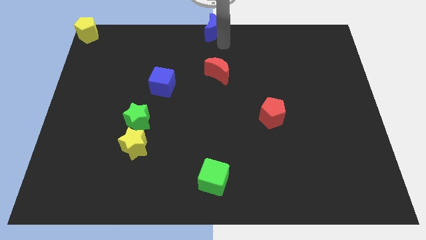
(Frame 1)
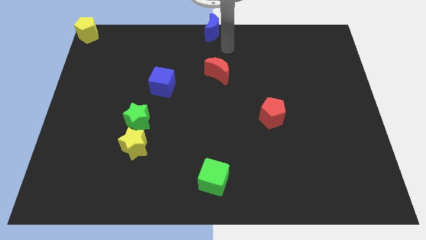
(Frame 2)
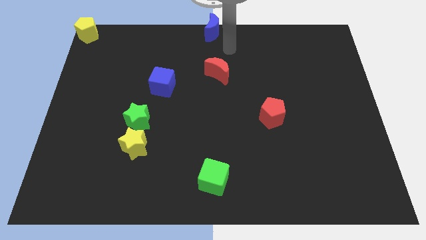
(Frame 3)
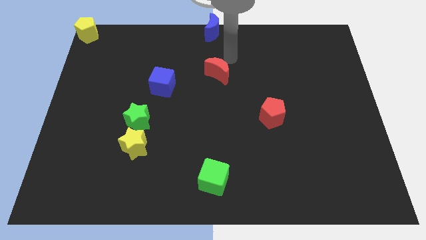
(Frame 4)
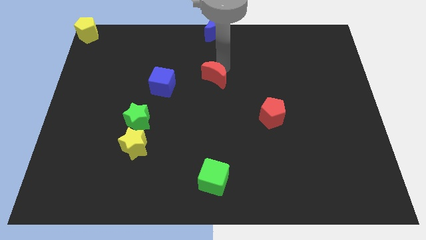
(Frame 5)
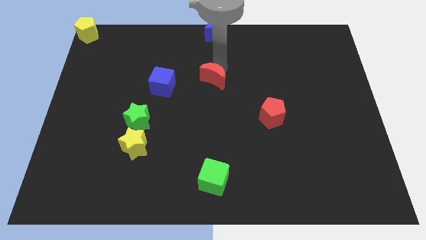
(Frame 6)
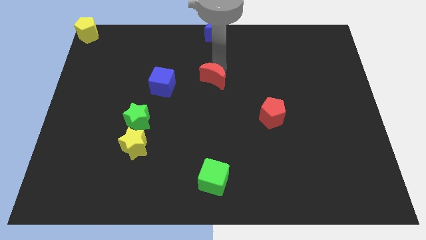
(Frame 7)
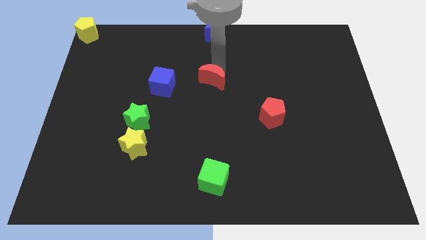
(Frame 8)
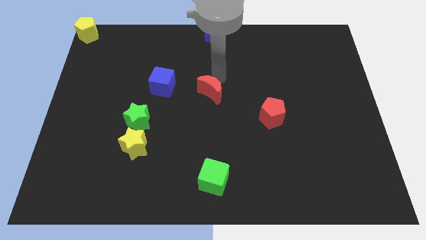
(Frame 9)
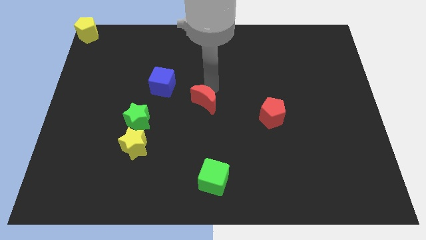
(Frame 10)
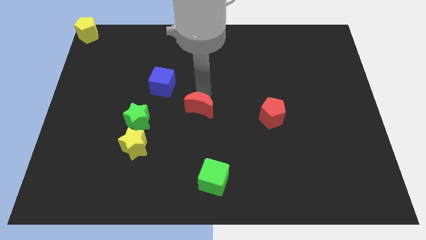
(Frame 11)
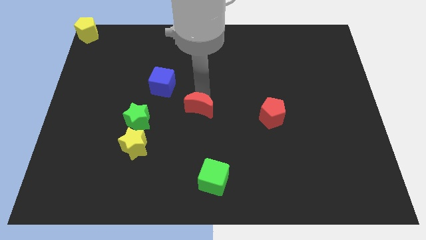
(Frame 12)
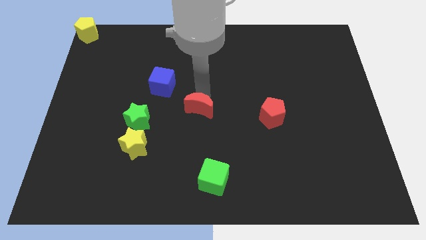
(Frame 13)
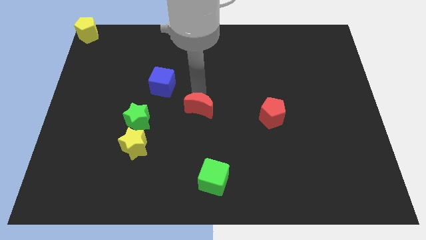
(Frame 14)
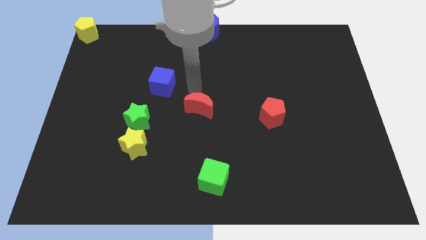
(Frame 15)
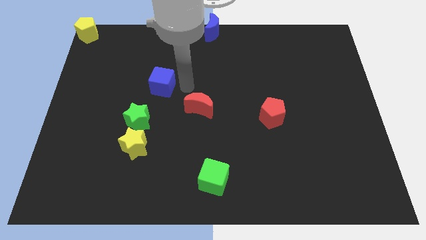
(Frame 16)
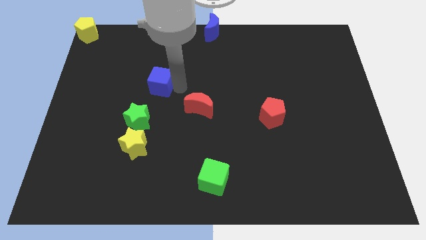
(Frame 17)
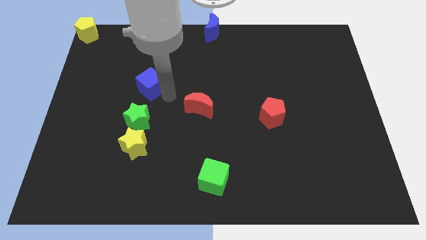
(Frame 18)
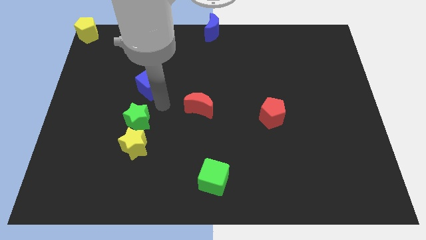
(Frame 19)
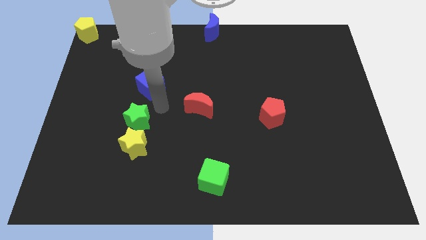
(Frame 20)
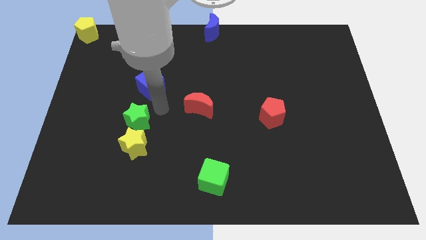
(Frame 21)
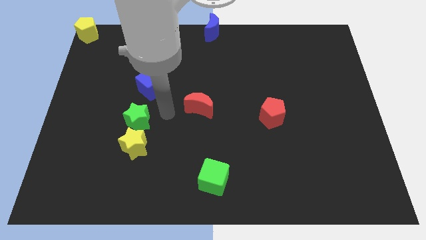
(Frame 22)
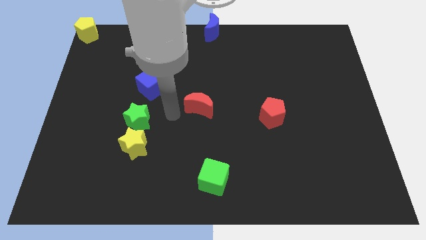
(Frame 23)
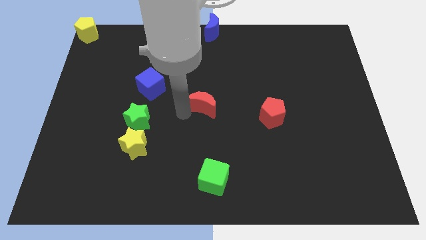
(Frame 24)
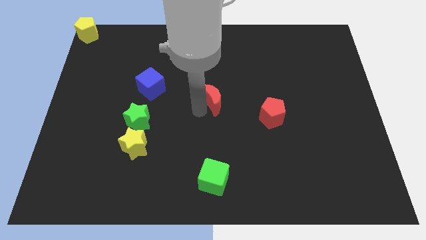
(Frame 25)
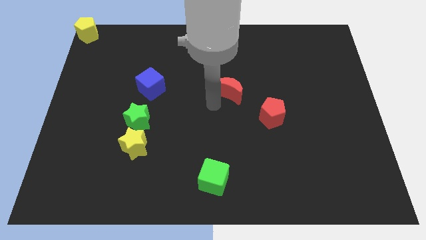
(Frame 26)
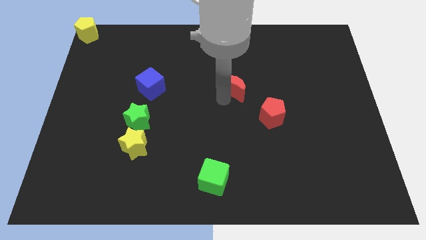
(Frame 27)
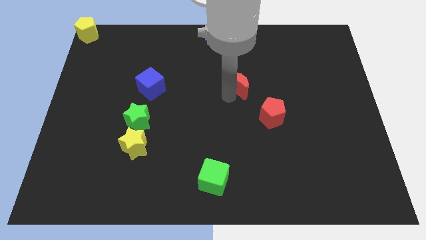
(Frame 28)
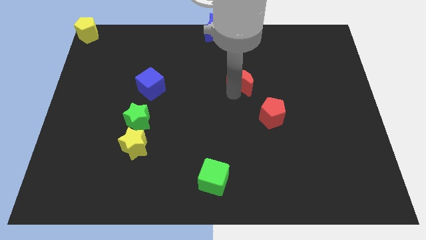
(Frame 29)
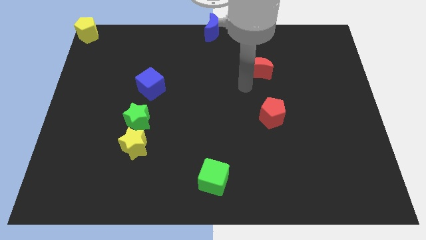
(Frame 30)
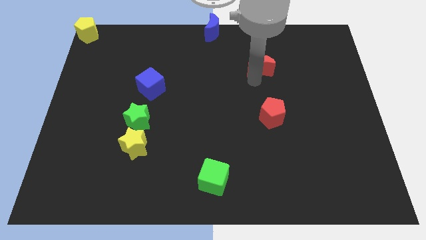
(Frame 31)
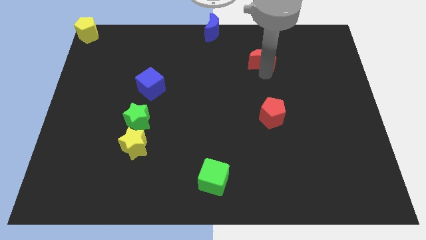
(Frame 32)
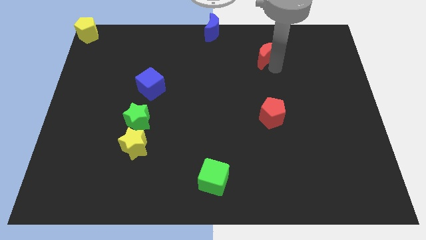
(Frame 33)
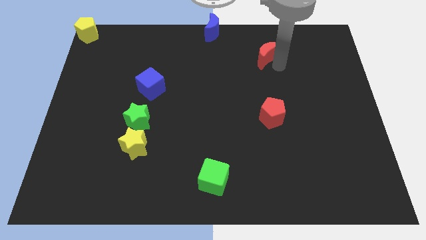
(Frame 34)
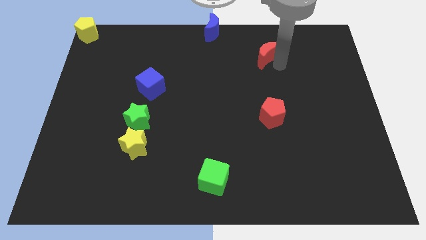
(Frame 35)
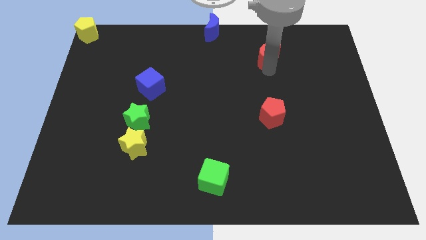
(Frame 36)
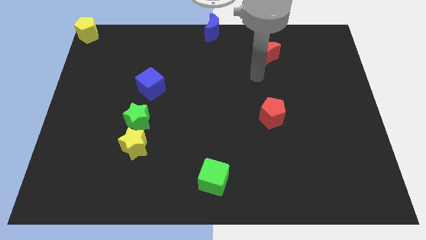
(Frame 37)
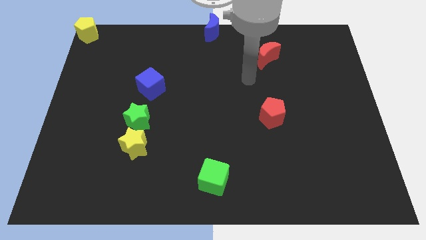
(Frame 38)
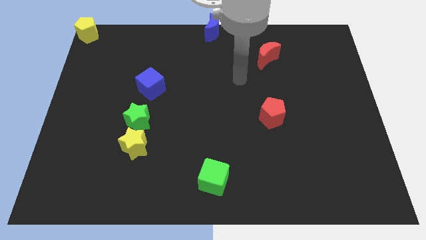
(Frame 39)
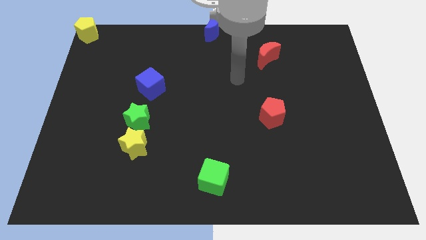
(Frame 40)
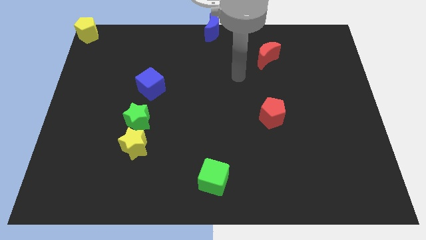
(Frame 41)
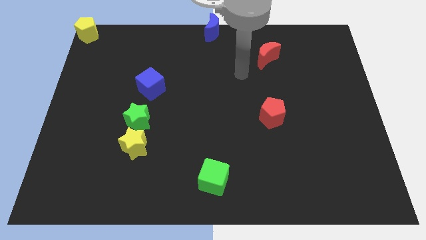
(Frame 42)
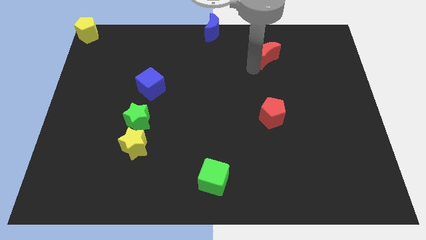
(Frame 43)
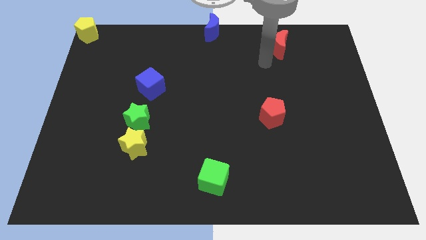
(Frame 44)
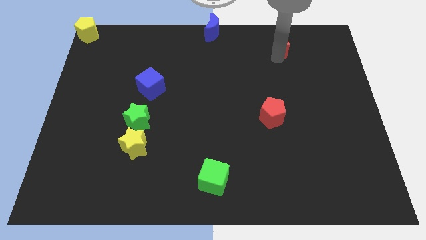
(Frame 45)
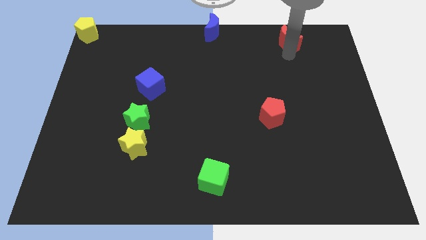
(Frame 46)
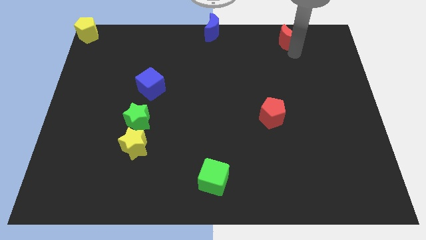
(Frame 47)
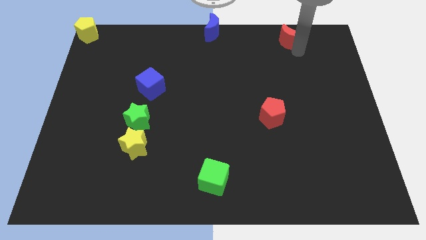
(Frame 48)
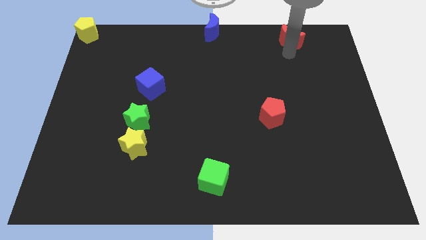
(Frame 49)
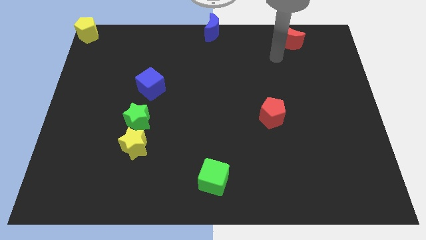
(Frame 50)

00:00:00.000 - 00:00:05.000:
move the red crescent to the top of the board

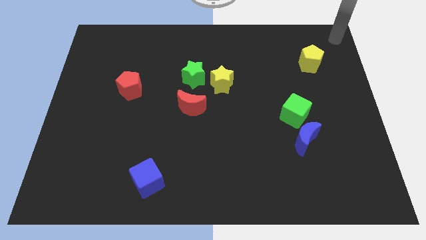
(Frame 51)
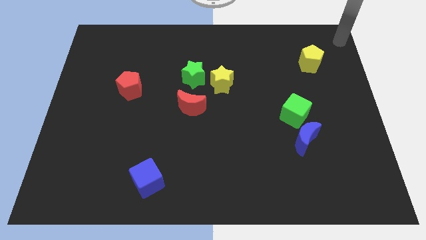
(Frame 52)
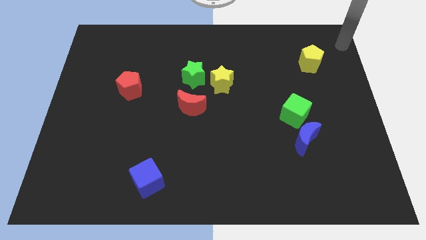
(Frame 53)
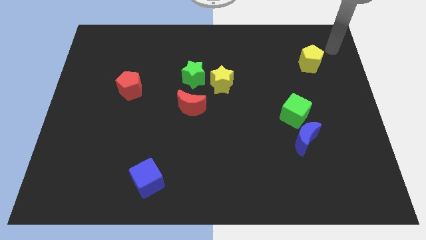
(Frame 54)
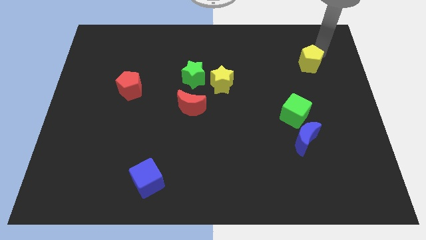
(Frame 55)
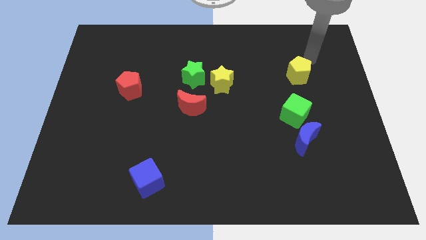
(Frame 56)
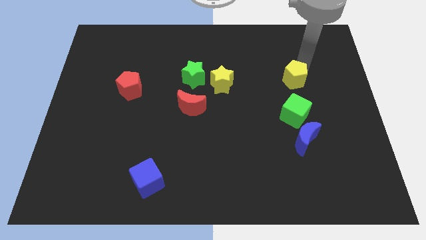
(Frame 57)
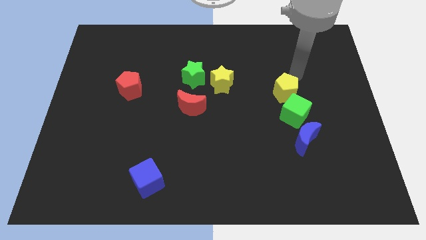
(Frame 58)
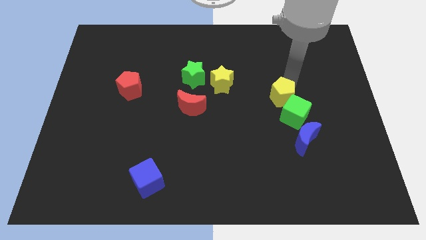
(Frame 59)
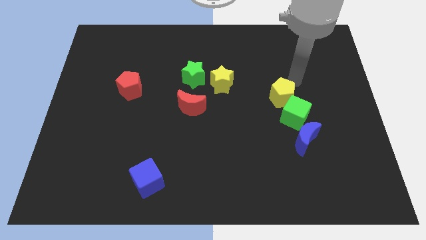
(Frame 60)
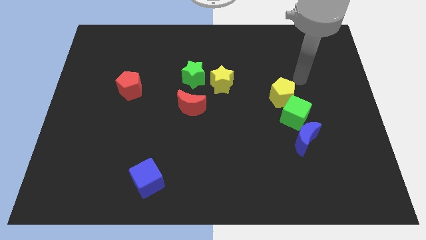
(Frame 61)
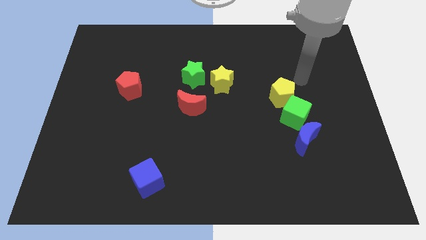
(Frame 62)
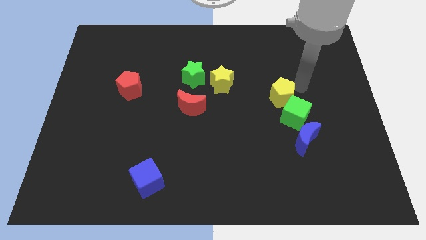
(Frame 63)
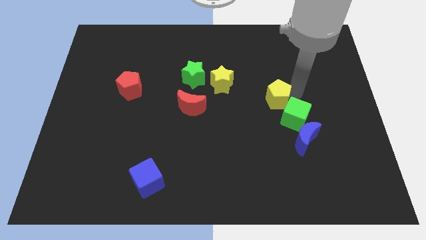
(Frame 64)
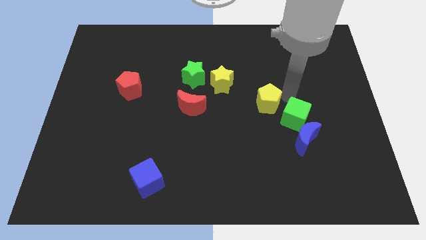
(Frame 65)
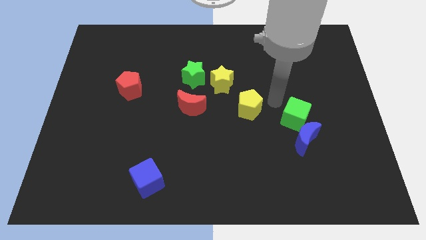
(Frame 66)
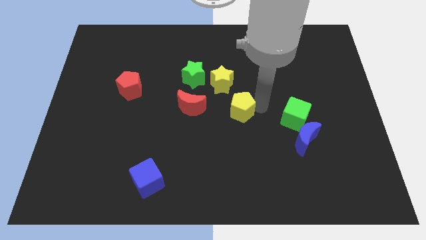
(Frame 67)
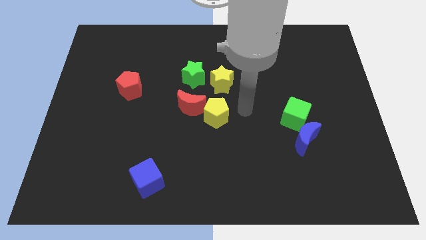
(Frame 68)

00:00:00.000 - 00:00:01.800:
push the yellow pentagon to the right of the red crescent

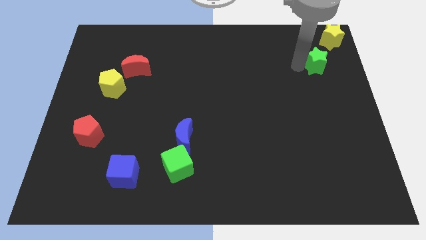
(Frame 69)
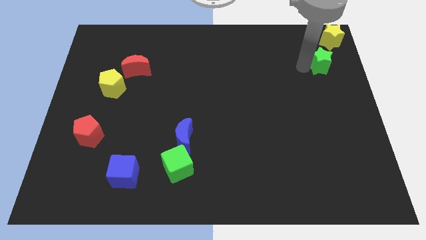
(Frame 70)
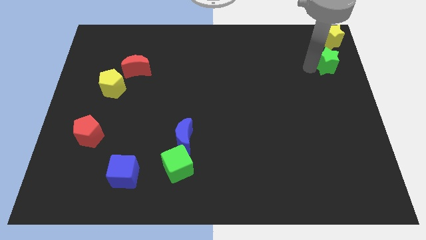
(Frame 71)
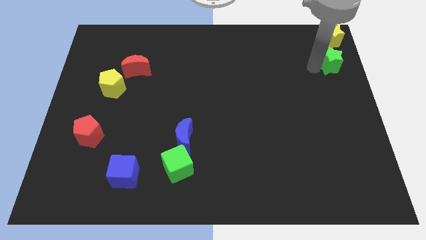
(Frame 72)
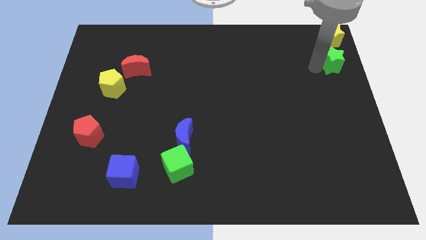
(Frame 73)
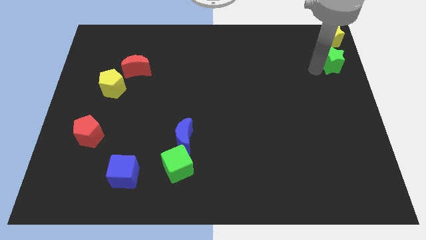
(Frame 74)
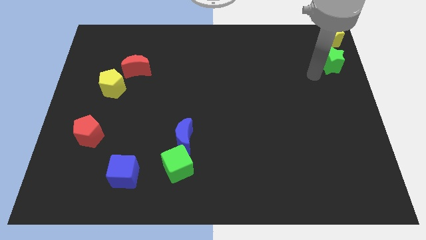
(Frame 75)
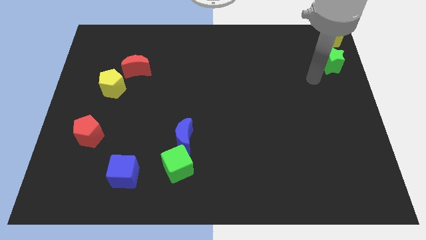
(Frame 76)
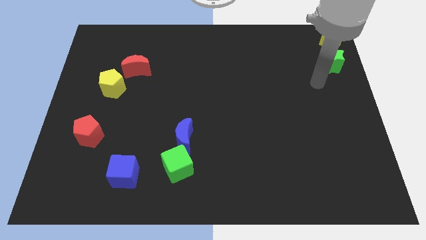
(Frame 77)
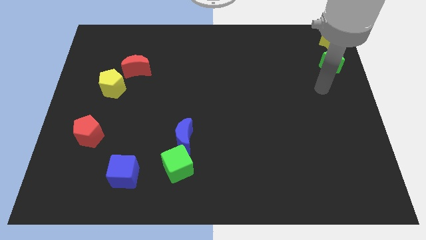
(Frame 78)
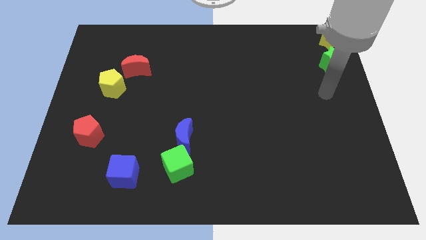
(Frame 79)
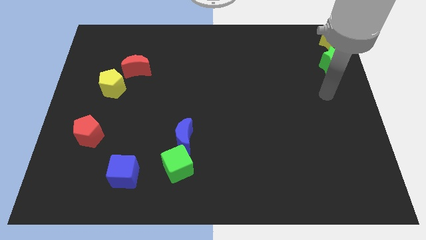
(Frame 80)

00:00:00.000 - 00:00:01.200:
move green star below yellow star

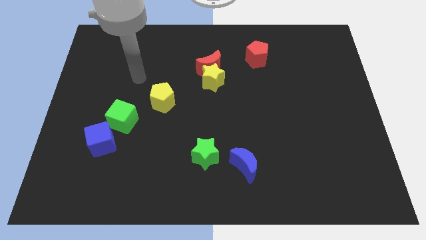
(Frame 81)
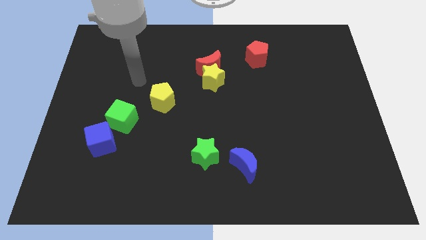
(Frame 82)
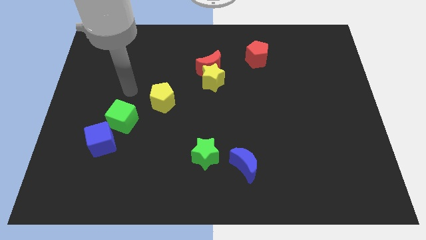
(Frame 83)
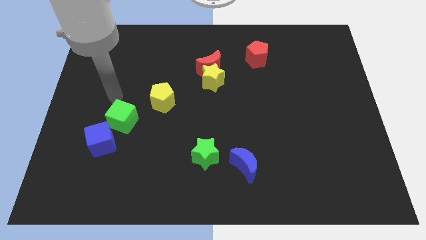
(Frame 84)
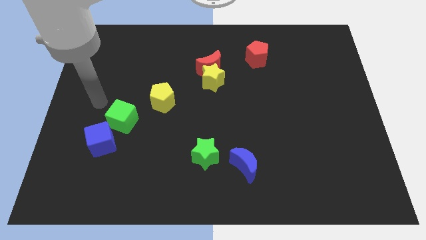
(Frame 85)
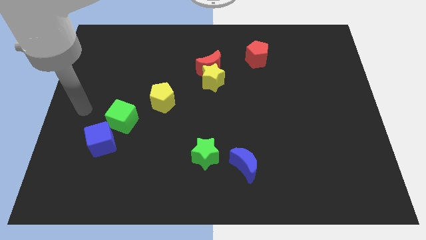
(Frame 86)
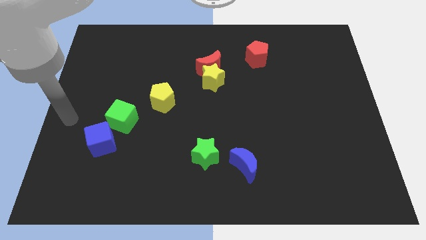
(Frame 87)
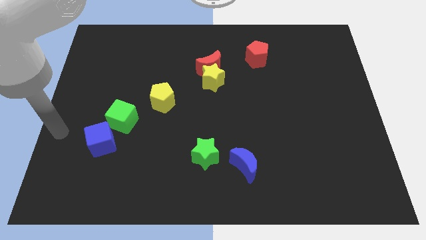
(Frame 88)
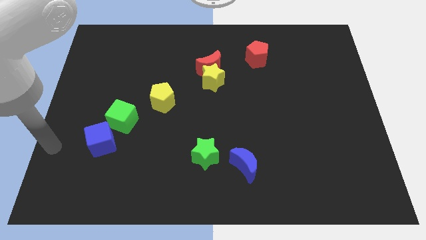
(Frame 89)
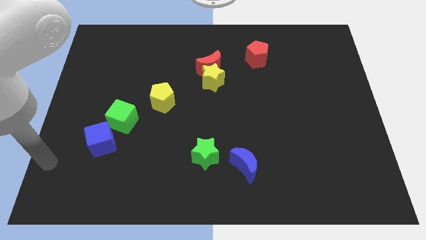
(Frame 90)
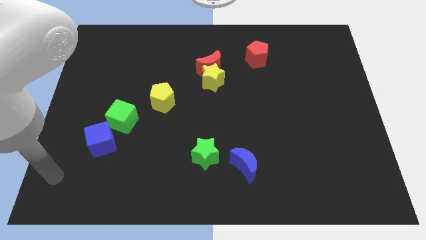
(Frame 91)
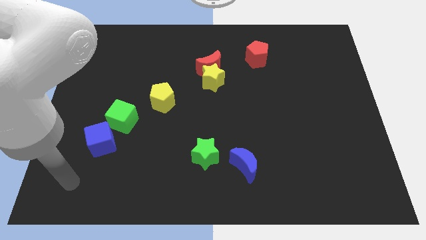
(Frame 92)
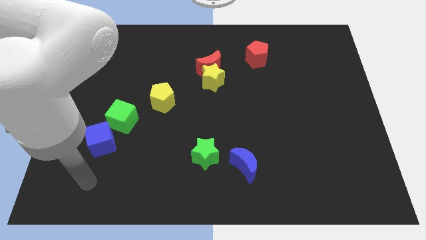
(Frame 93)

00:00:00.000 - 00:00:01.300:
move your hand towards the bottom left
